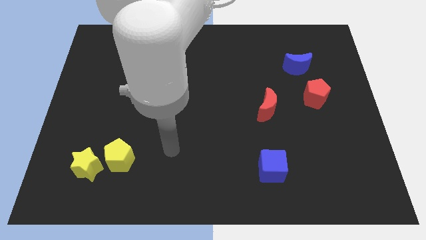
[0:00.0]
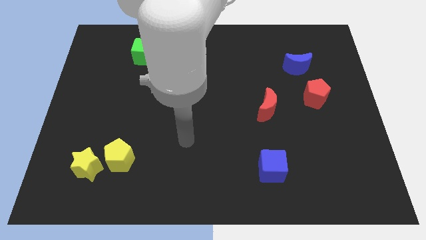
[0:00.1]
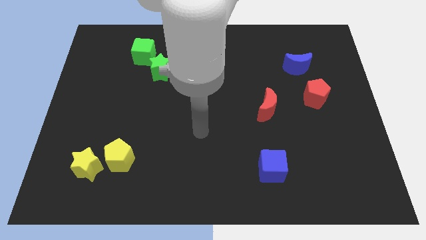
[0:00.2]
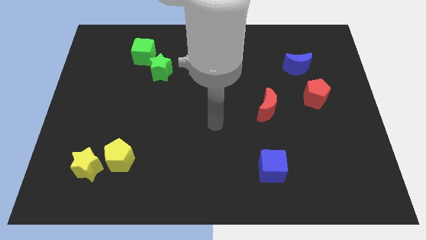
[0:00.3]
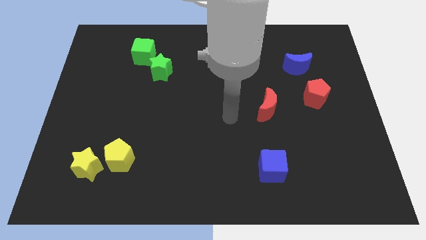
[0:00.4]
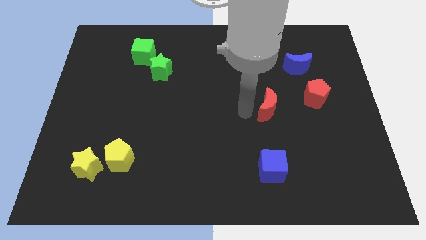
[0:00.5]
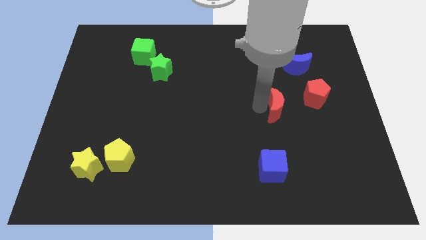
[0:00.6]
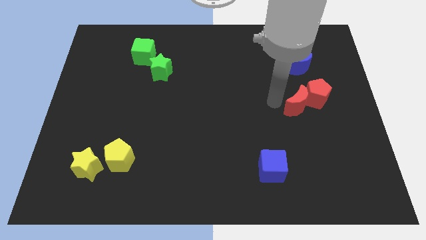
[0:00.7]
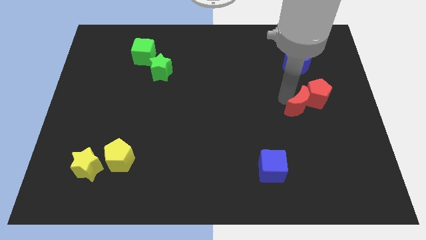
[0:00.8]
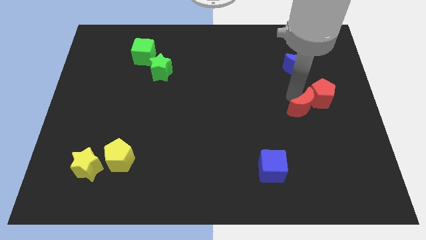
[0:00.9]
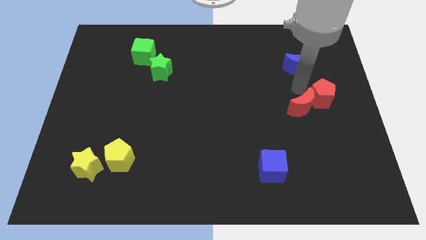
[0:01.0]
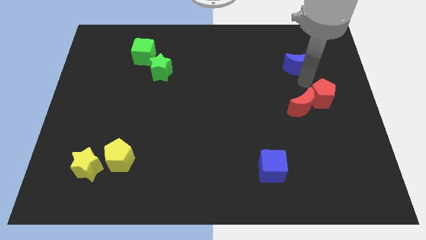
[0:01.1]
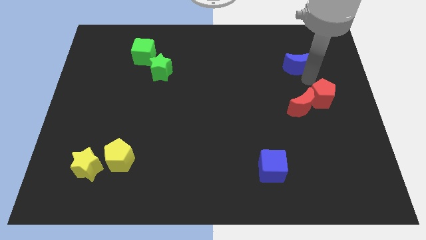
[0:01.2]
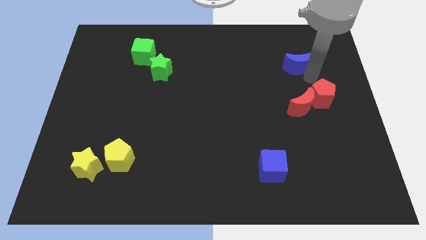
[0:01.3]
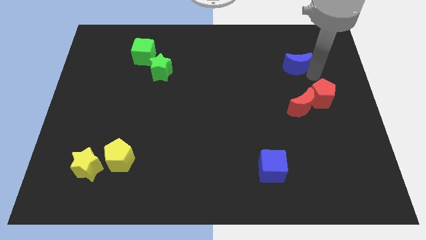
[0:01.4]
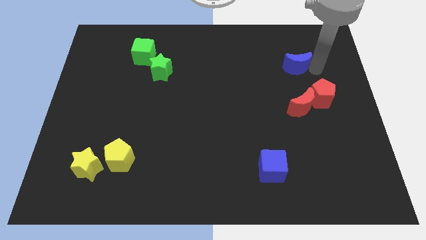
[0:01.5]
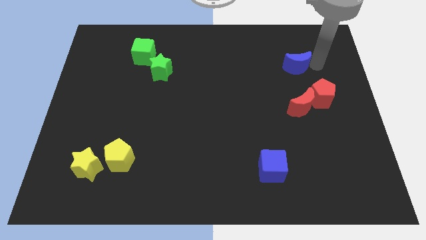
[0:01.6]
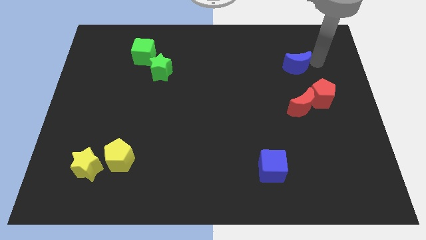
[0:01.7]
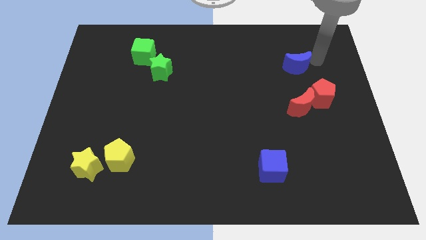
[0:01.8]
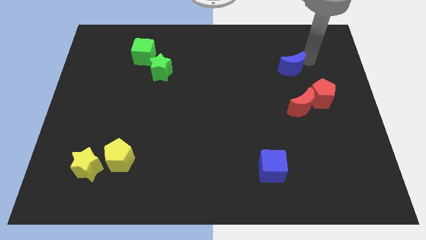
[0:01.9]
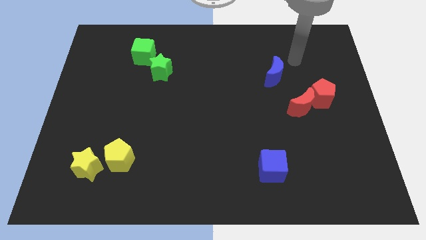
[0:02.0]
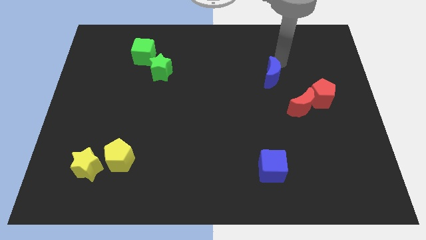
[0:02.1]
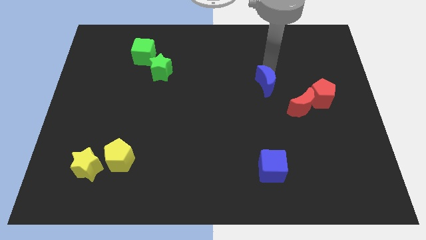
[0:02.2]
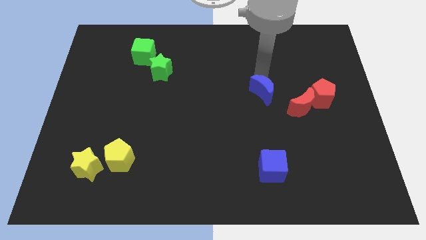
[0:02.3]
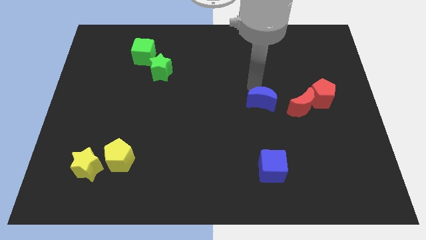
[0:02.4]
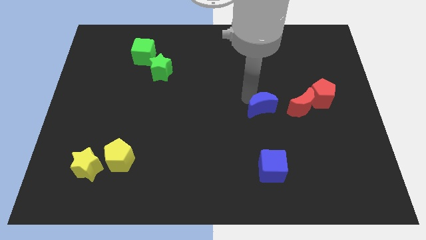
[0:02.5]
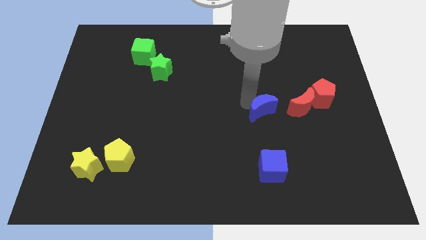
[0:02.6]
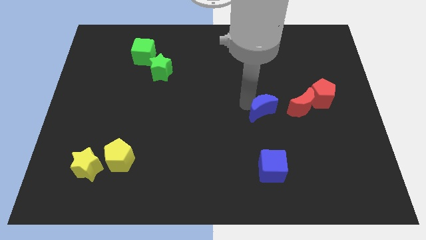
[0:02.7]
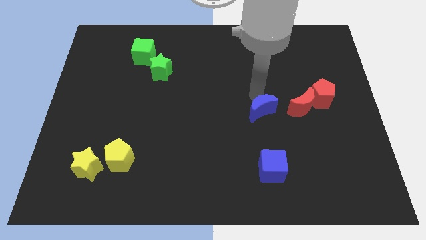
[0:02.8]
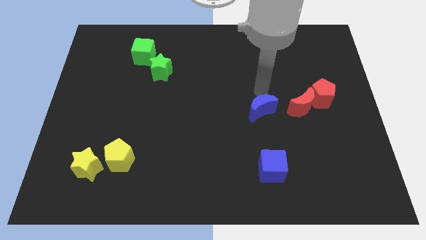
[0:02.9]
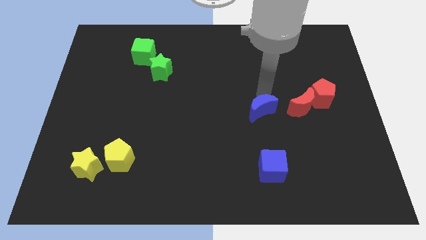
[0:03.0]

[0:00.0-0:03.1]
place the blue moon parallel left of the red crescent

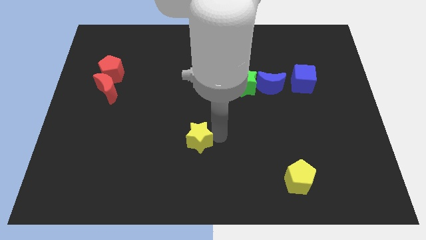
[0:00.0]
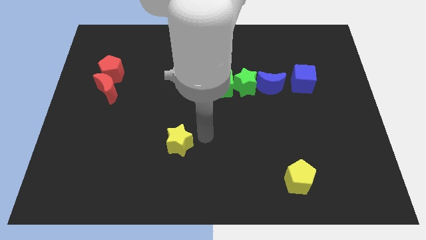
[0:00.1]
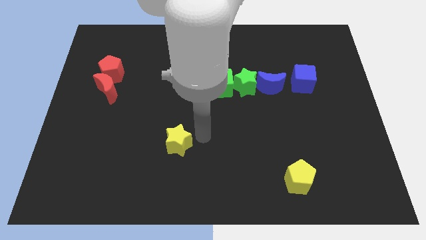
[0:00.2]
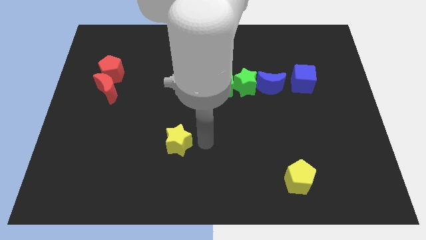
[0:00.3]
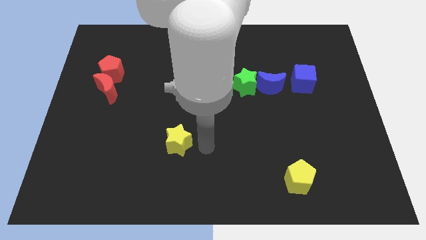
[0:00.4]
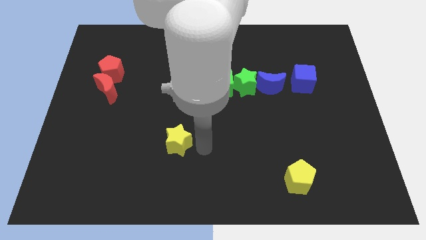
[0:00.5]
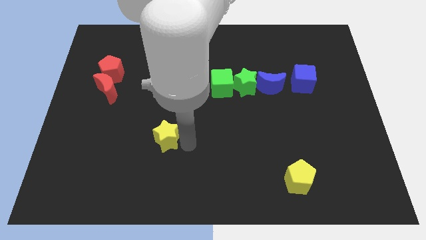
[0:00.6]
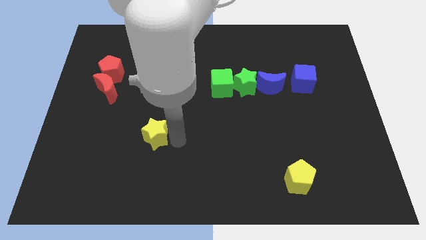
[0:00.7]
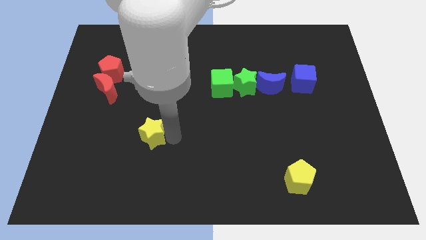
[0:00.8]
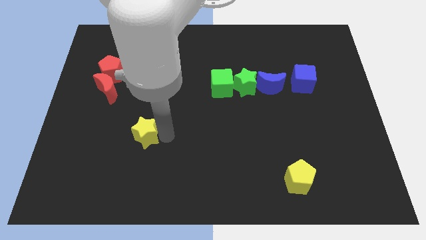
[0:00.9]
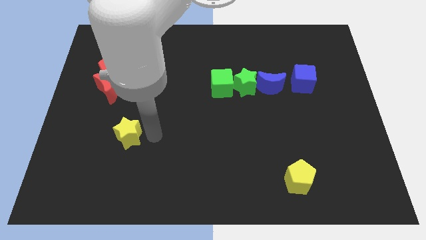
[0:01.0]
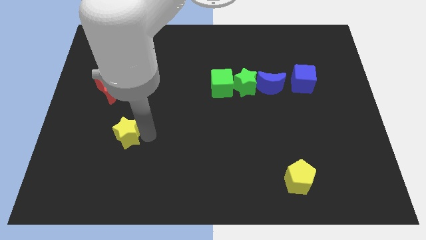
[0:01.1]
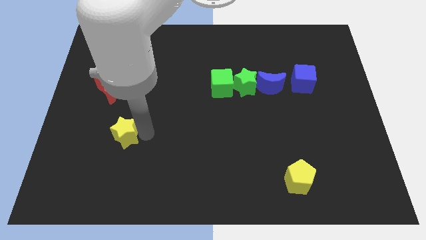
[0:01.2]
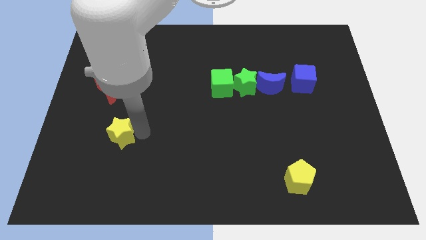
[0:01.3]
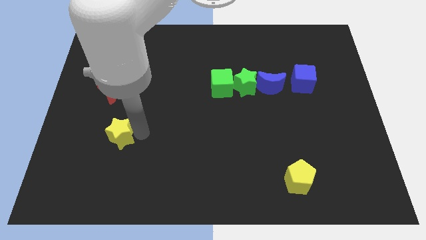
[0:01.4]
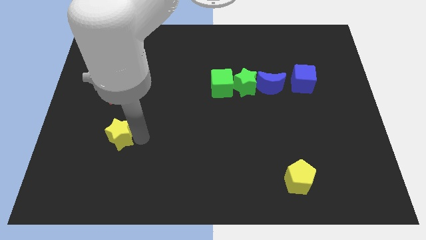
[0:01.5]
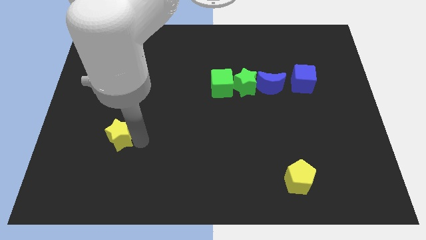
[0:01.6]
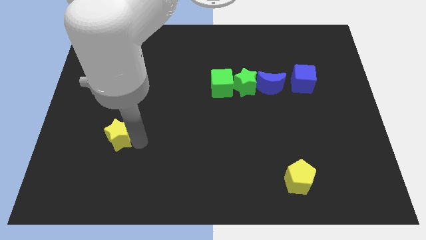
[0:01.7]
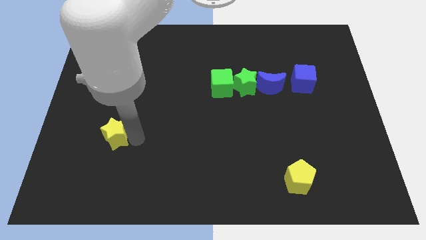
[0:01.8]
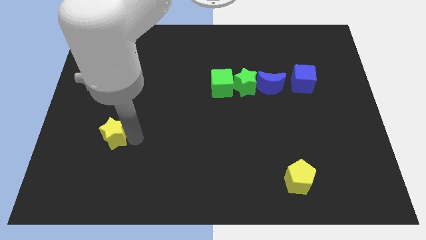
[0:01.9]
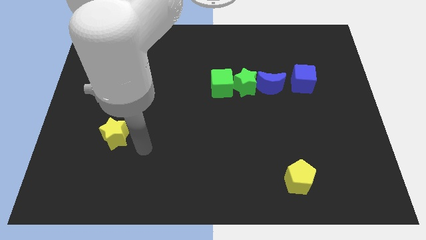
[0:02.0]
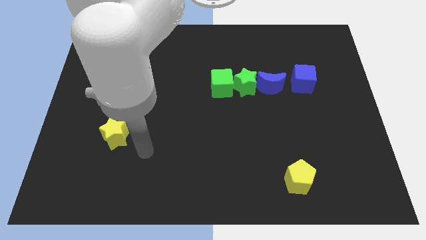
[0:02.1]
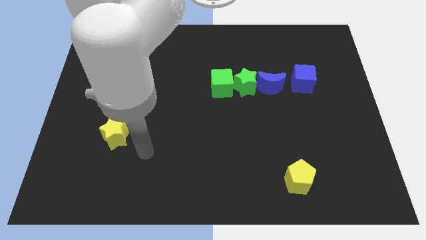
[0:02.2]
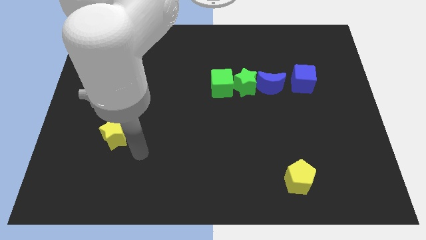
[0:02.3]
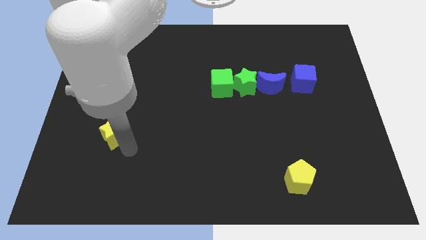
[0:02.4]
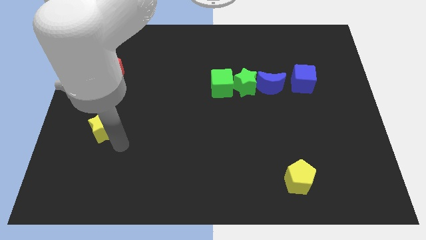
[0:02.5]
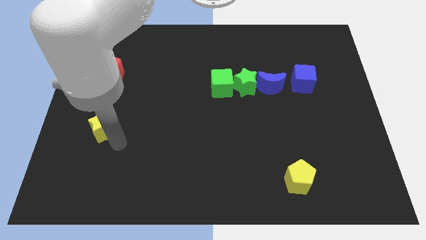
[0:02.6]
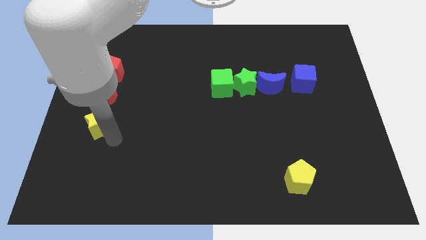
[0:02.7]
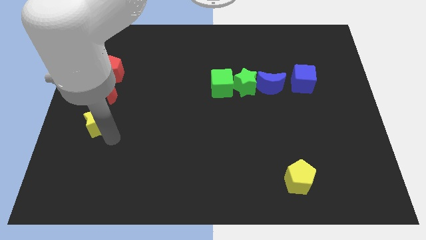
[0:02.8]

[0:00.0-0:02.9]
place yellow star to the bottom of red moon

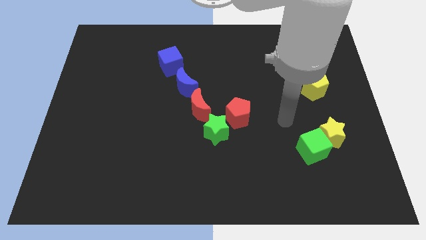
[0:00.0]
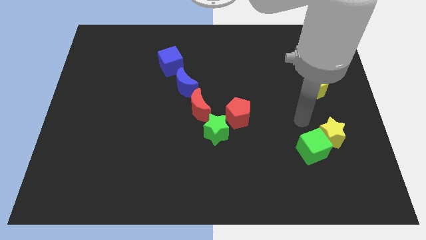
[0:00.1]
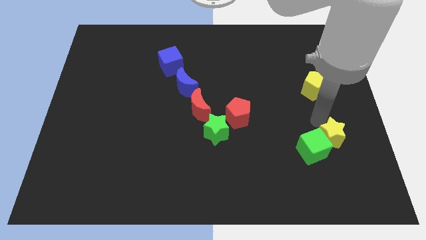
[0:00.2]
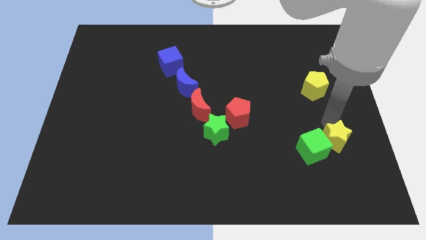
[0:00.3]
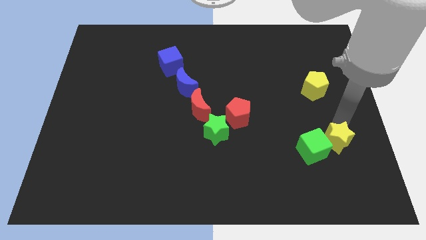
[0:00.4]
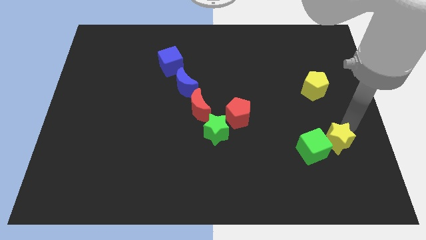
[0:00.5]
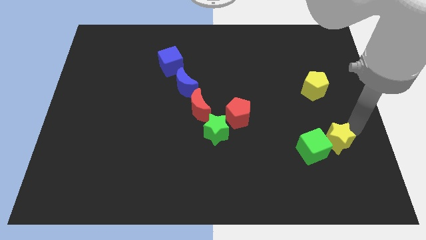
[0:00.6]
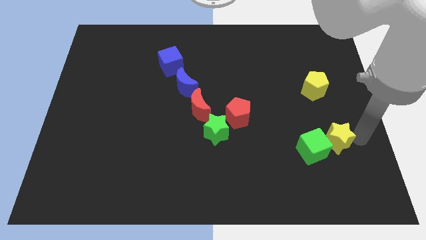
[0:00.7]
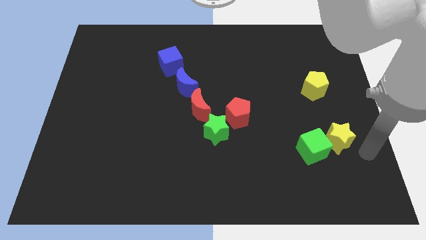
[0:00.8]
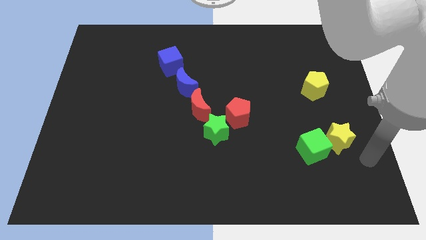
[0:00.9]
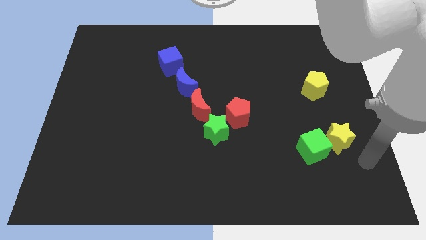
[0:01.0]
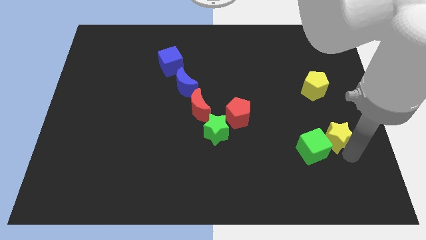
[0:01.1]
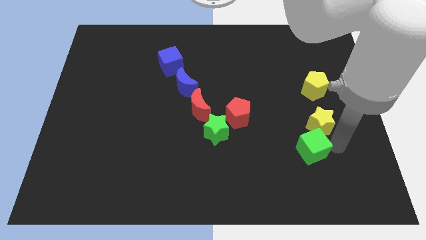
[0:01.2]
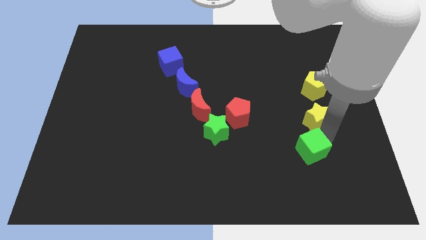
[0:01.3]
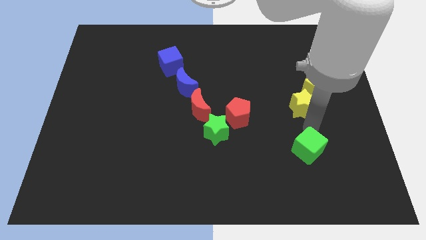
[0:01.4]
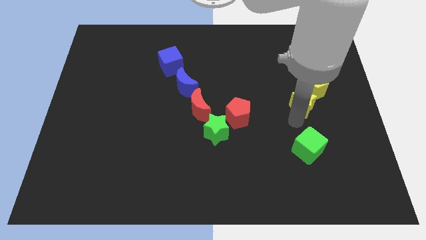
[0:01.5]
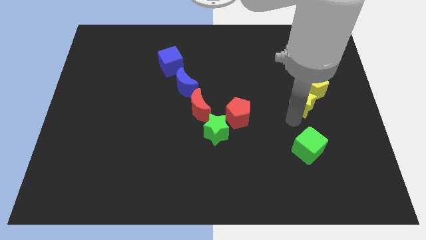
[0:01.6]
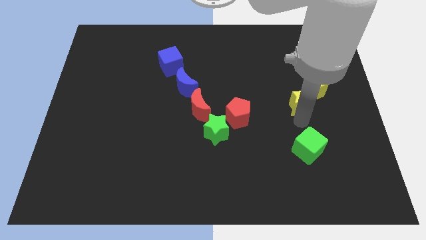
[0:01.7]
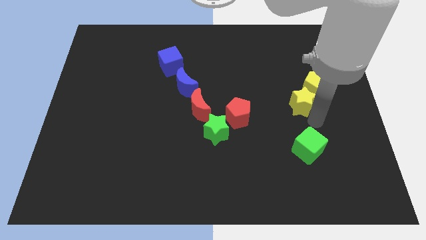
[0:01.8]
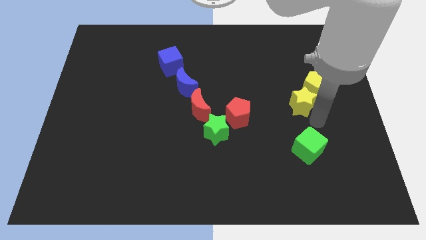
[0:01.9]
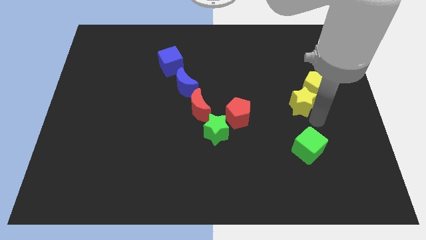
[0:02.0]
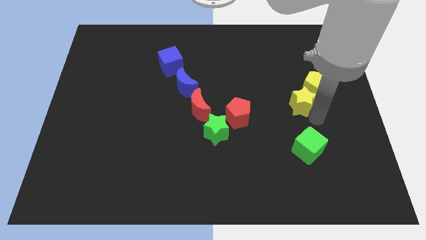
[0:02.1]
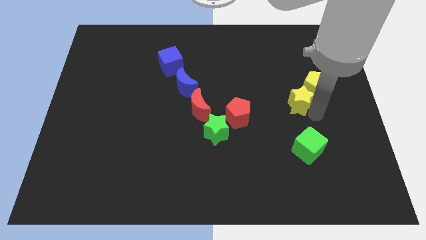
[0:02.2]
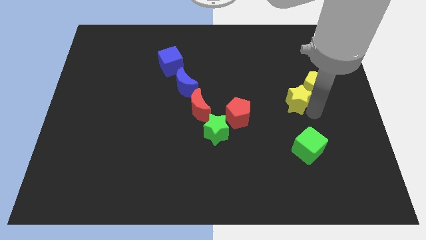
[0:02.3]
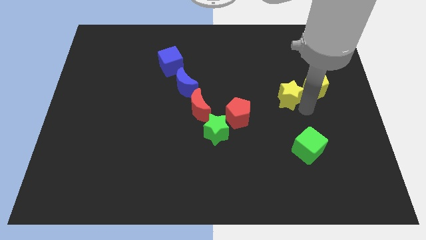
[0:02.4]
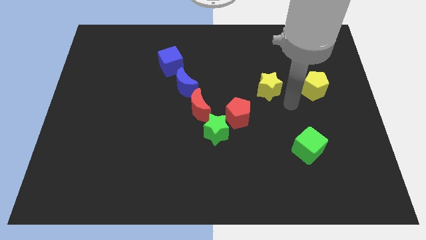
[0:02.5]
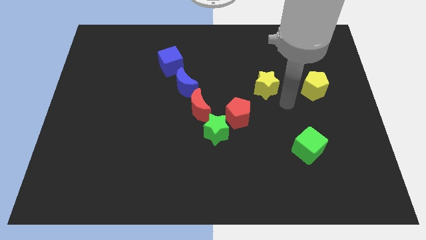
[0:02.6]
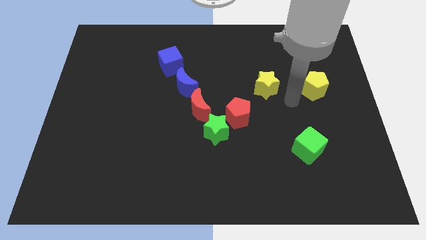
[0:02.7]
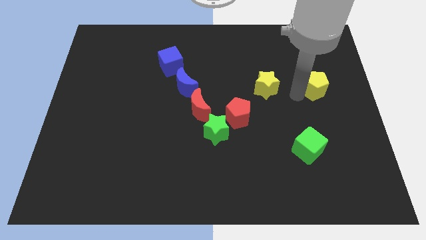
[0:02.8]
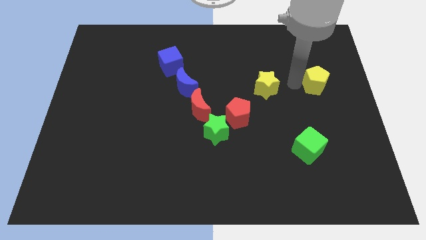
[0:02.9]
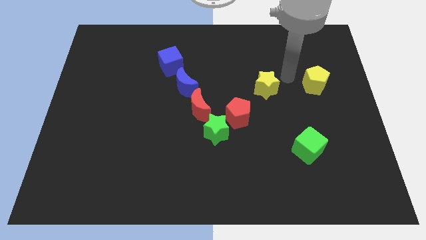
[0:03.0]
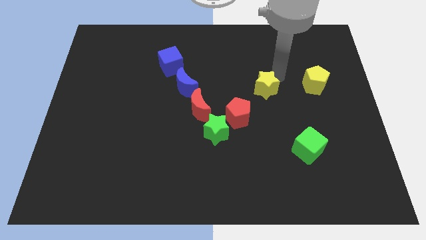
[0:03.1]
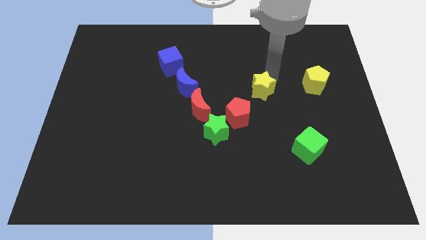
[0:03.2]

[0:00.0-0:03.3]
push the yellow star to the left side of the yellow pentagon
